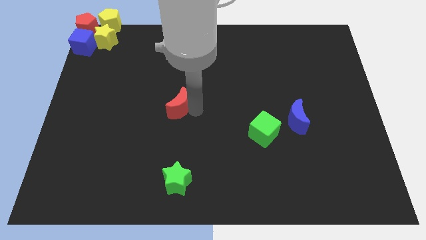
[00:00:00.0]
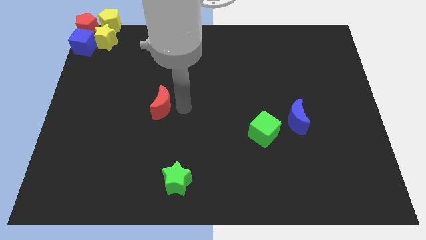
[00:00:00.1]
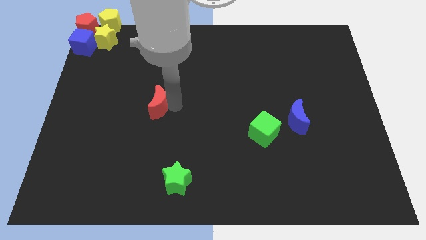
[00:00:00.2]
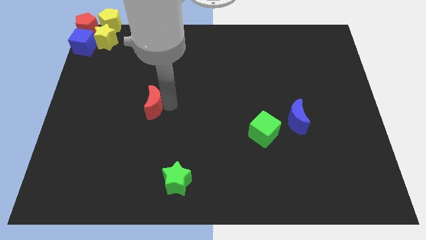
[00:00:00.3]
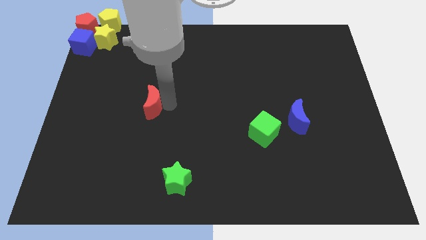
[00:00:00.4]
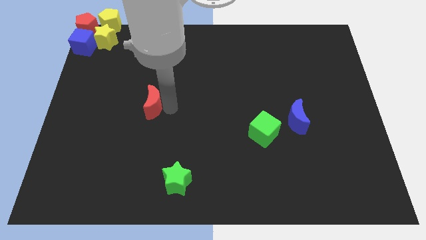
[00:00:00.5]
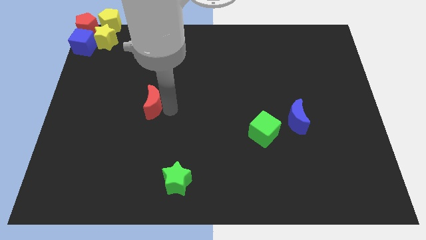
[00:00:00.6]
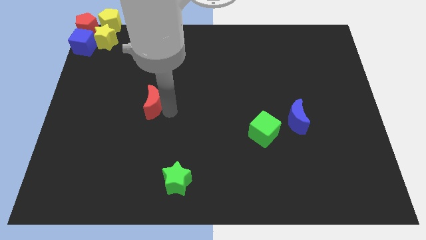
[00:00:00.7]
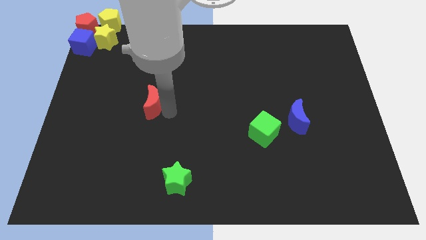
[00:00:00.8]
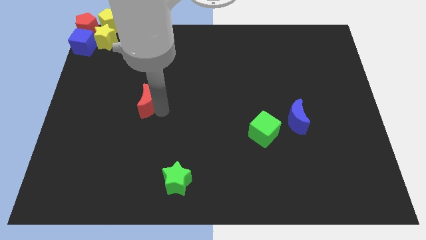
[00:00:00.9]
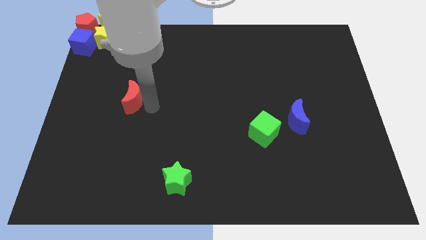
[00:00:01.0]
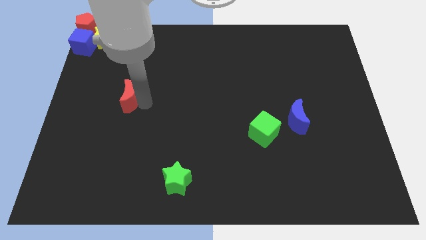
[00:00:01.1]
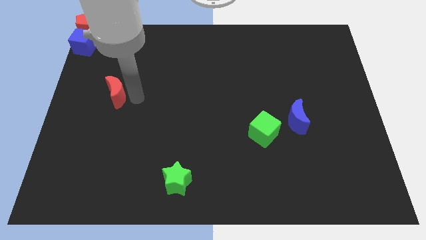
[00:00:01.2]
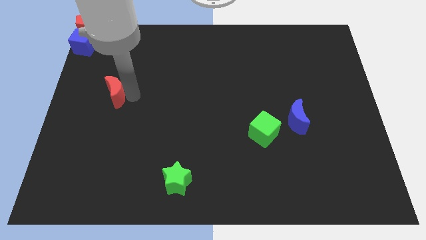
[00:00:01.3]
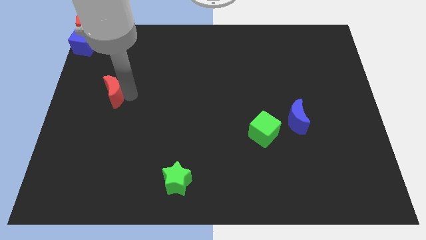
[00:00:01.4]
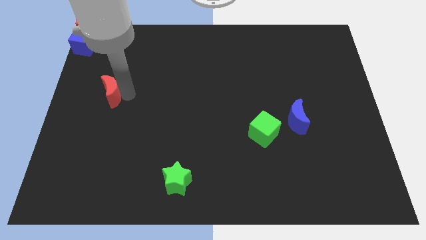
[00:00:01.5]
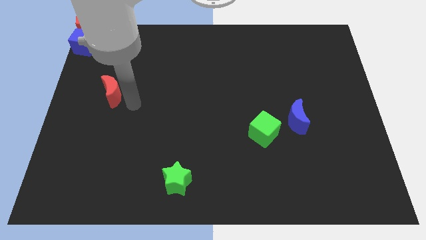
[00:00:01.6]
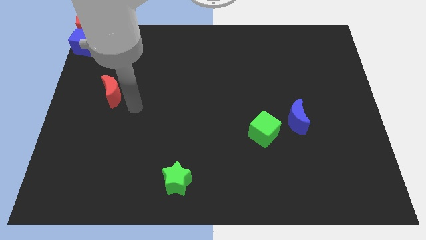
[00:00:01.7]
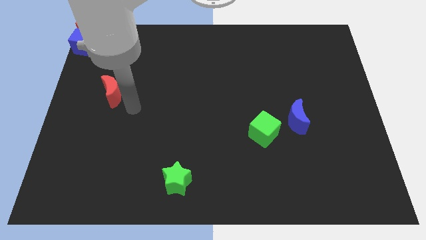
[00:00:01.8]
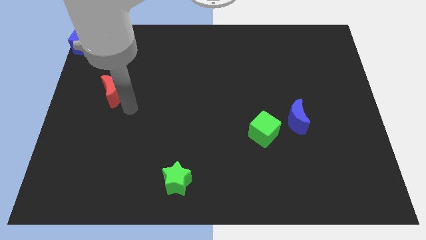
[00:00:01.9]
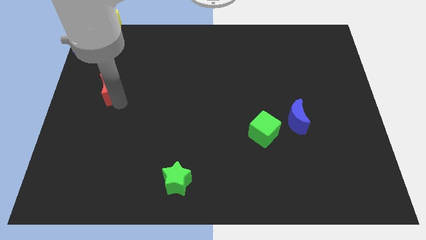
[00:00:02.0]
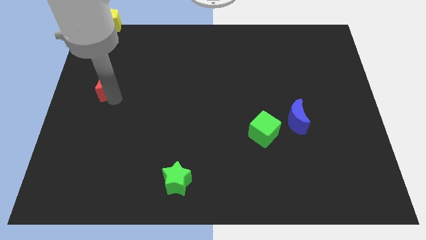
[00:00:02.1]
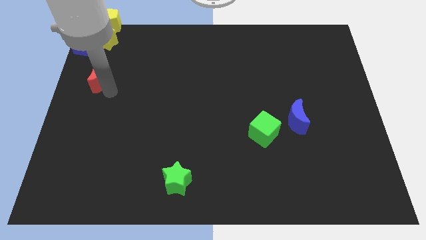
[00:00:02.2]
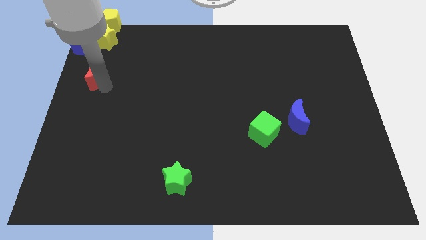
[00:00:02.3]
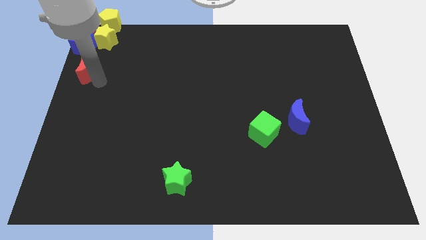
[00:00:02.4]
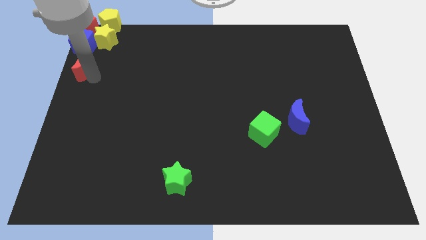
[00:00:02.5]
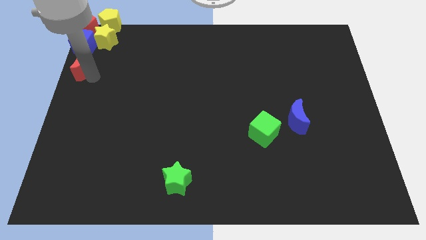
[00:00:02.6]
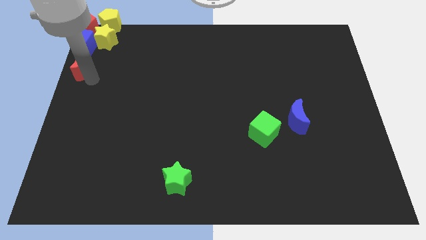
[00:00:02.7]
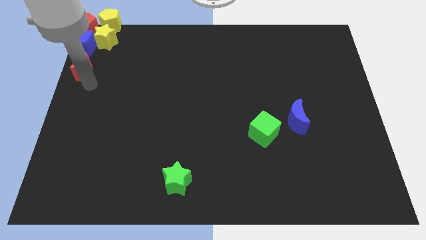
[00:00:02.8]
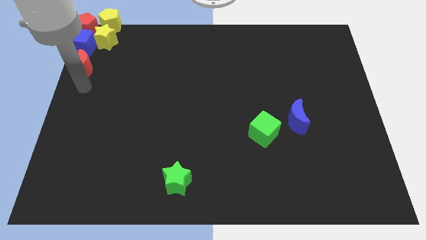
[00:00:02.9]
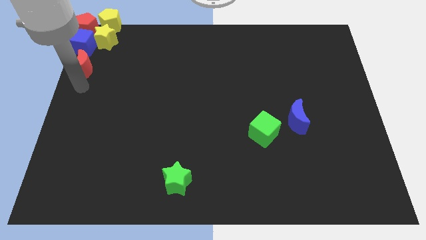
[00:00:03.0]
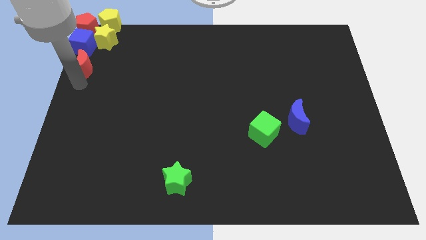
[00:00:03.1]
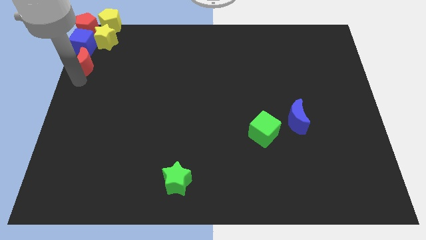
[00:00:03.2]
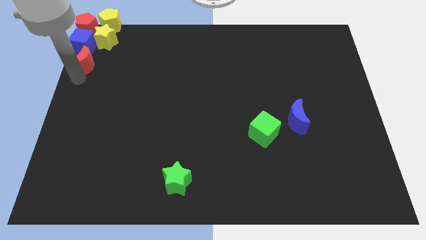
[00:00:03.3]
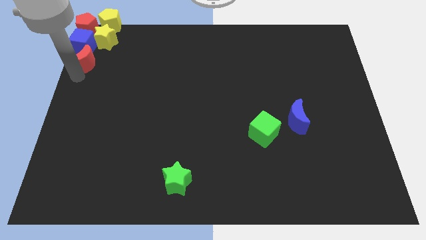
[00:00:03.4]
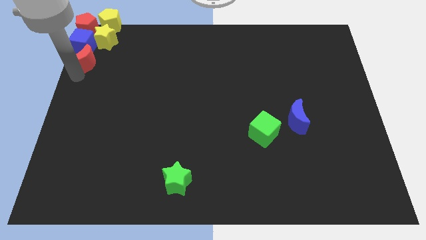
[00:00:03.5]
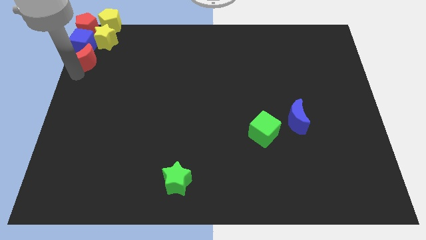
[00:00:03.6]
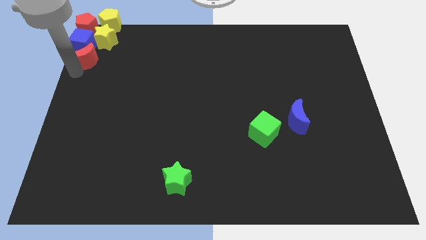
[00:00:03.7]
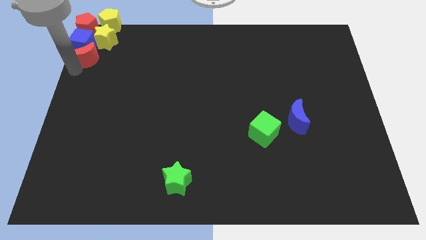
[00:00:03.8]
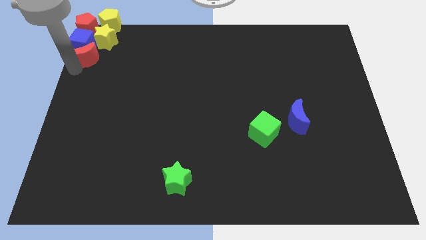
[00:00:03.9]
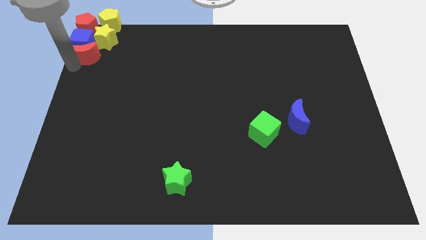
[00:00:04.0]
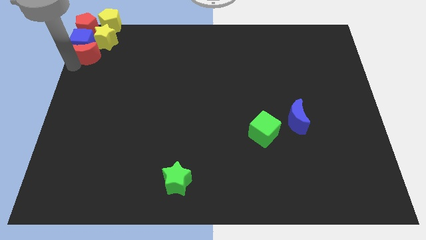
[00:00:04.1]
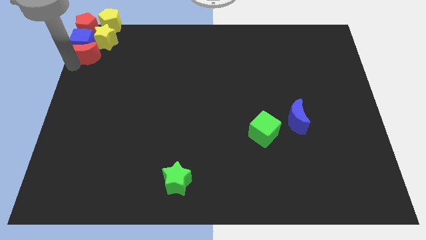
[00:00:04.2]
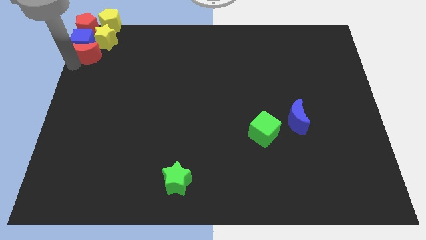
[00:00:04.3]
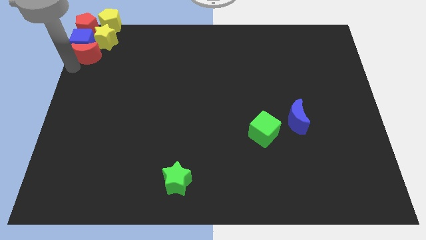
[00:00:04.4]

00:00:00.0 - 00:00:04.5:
place the red moon vertically below the blue cube

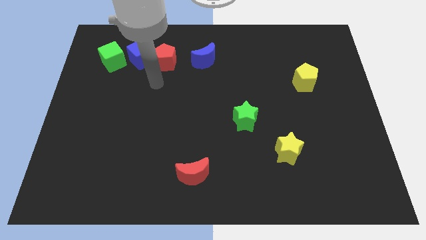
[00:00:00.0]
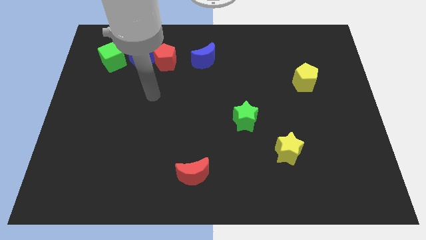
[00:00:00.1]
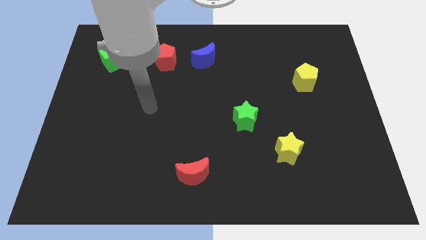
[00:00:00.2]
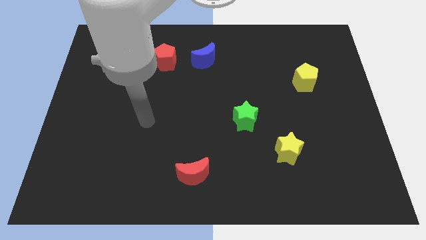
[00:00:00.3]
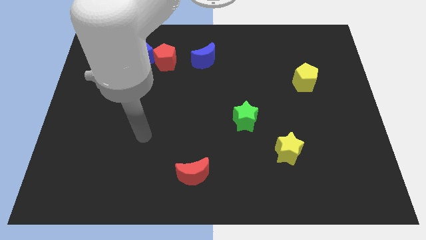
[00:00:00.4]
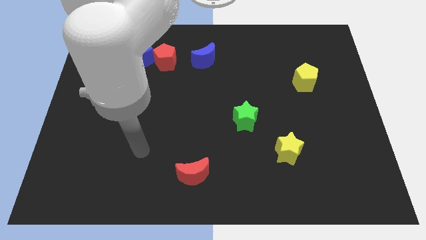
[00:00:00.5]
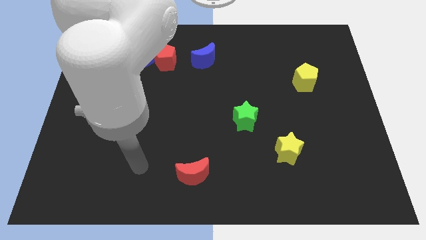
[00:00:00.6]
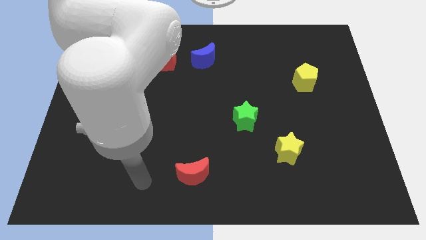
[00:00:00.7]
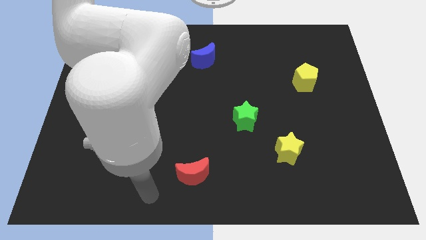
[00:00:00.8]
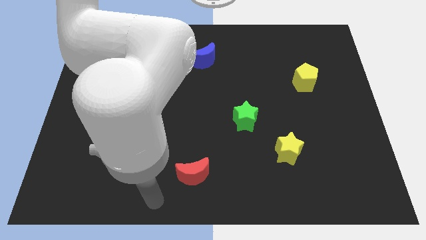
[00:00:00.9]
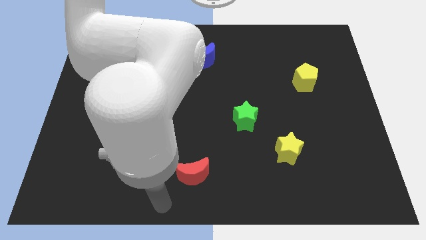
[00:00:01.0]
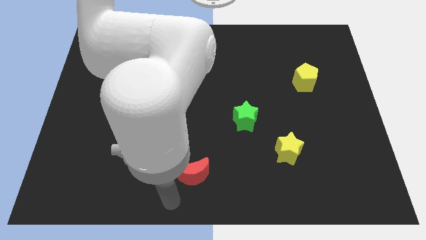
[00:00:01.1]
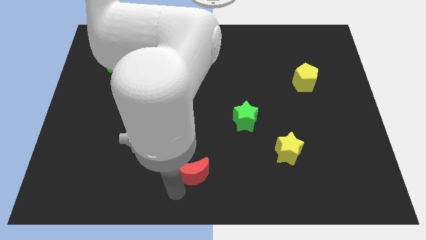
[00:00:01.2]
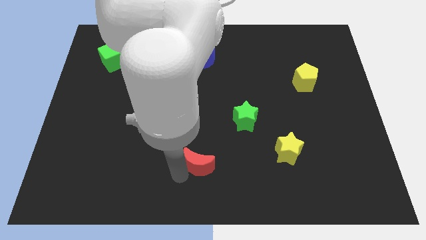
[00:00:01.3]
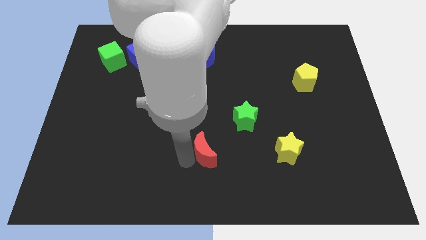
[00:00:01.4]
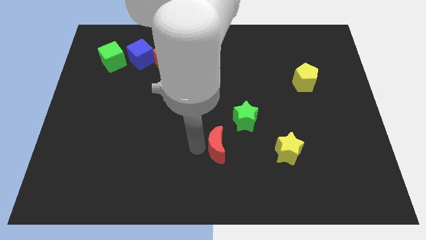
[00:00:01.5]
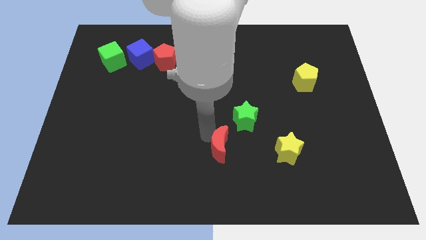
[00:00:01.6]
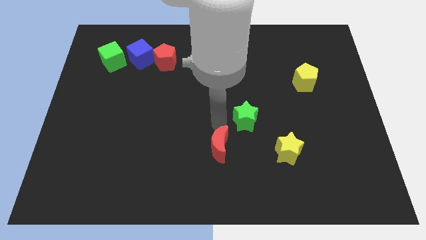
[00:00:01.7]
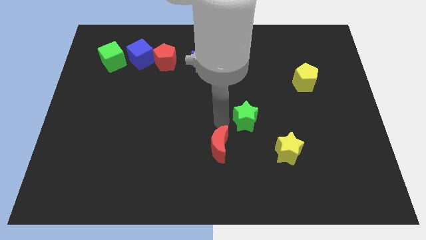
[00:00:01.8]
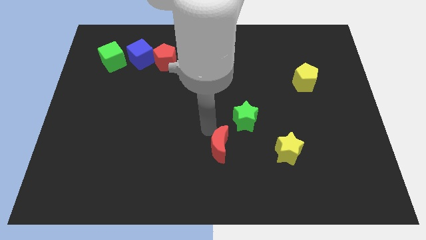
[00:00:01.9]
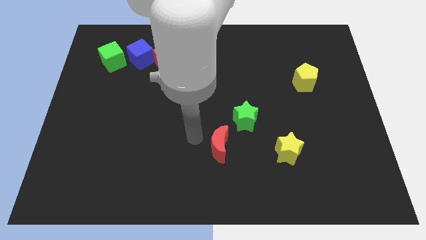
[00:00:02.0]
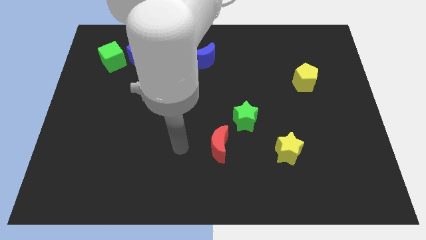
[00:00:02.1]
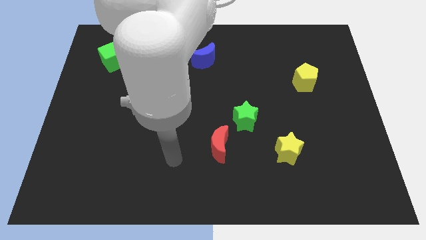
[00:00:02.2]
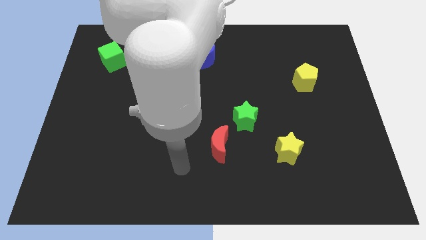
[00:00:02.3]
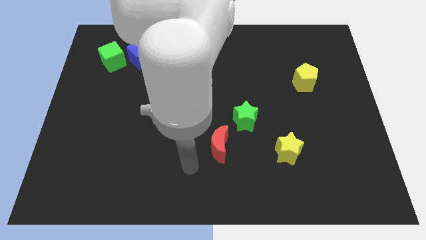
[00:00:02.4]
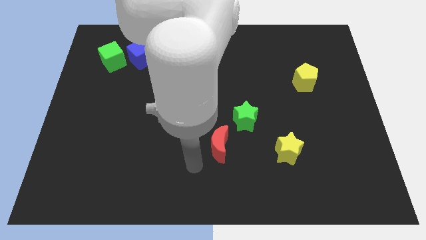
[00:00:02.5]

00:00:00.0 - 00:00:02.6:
move the red moon horizontally to the left of the yellow star

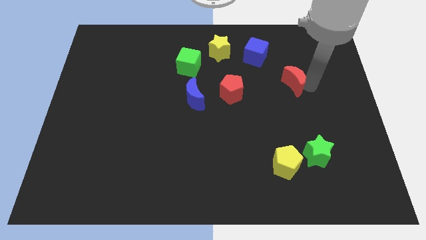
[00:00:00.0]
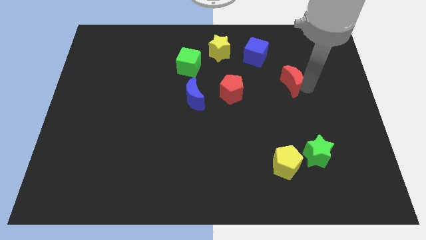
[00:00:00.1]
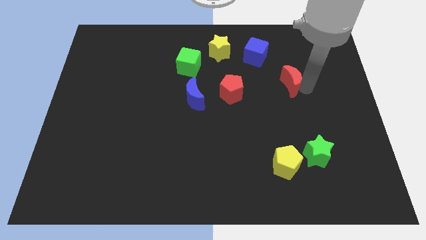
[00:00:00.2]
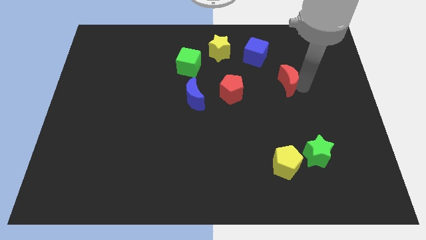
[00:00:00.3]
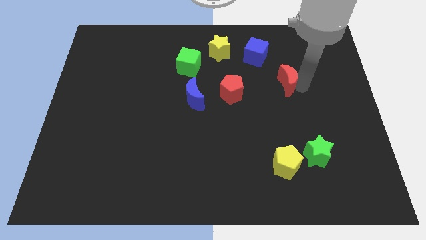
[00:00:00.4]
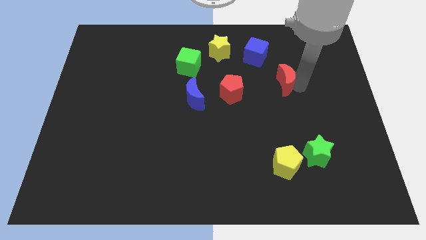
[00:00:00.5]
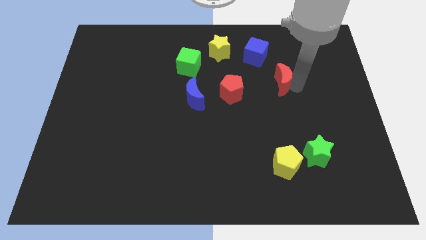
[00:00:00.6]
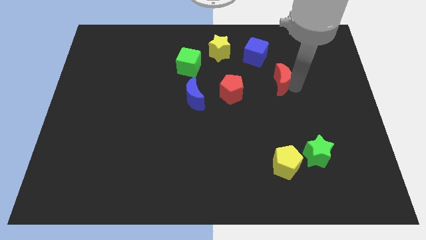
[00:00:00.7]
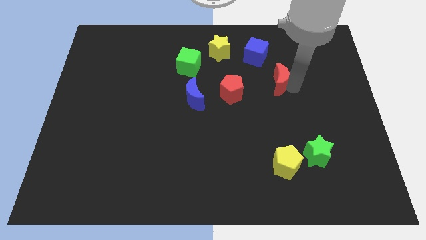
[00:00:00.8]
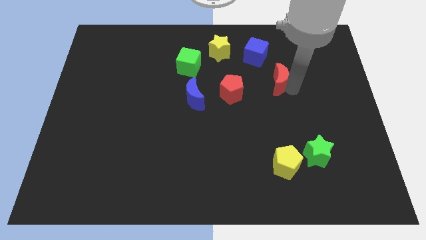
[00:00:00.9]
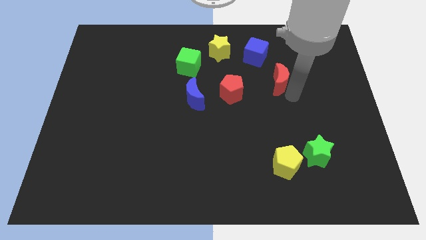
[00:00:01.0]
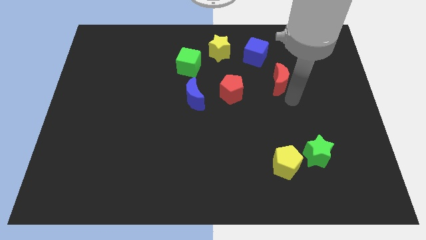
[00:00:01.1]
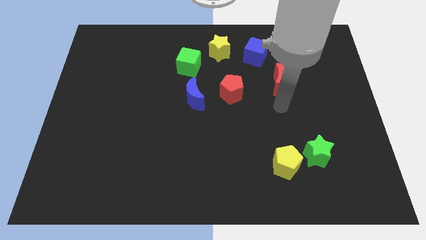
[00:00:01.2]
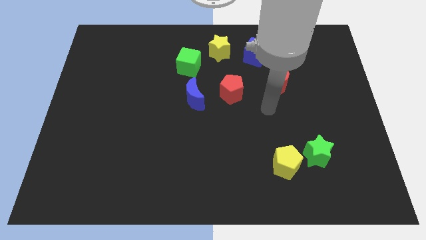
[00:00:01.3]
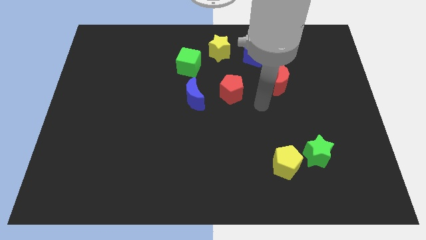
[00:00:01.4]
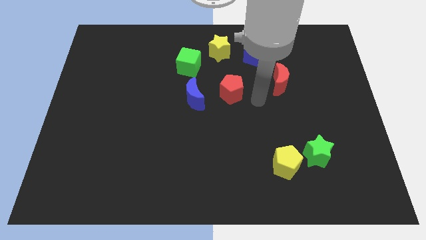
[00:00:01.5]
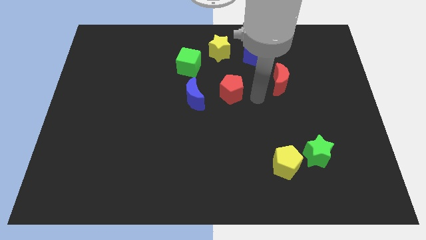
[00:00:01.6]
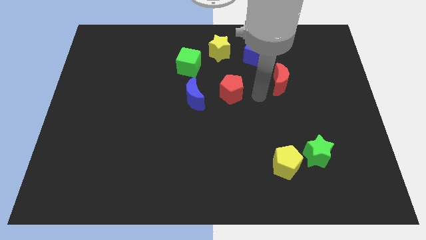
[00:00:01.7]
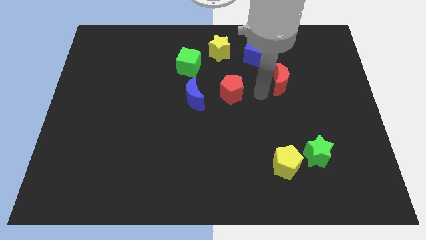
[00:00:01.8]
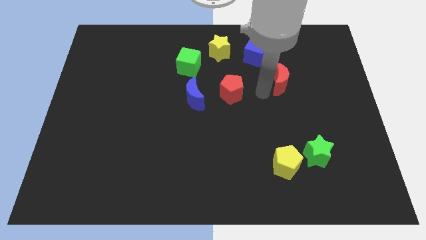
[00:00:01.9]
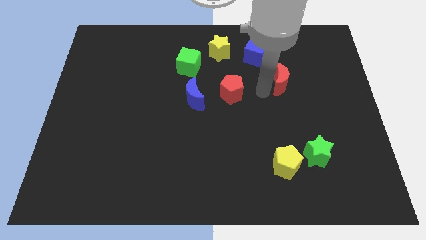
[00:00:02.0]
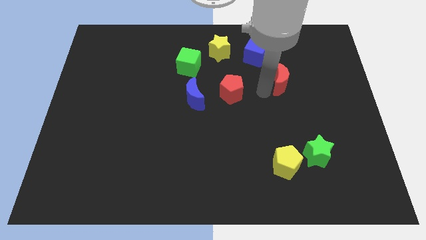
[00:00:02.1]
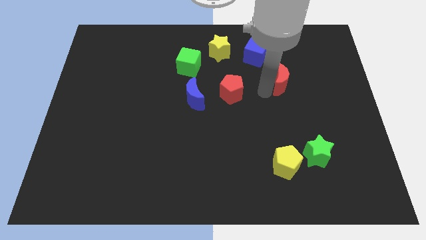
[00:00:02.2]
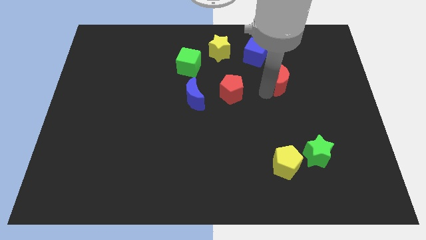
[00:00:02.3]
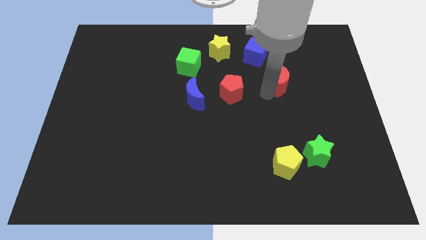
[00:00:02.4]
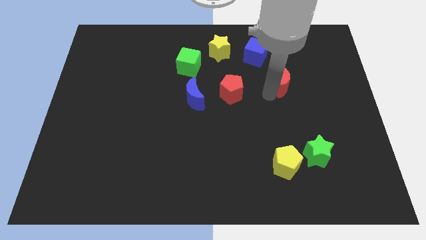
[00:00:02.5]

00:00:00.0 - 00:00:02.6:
push red crescent towards the red pentagon
